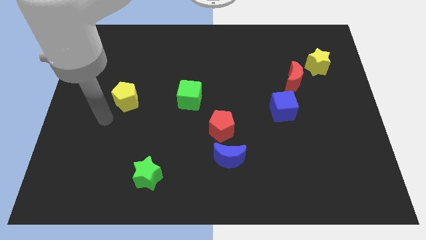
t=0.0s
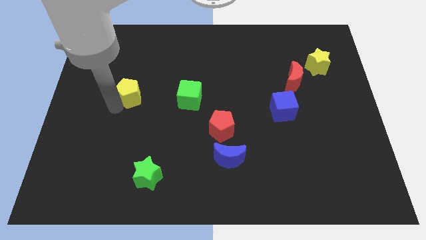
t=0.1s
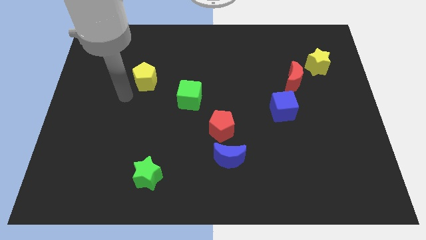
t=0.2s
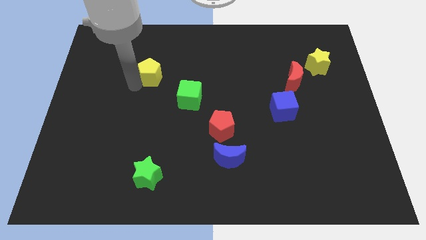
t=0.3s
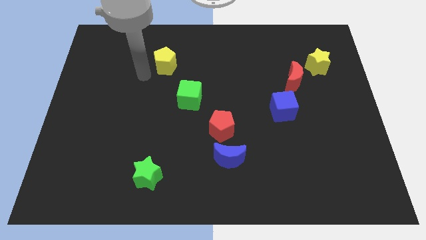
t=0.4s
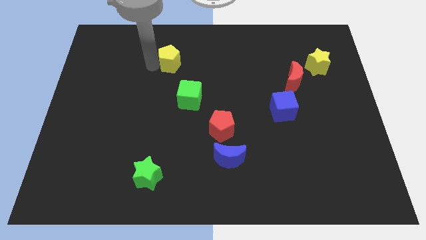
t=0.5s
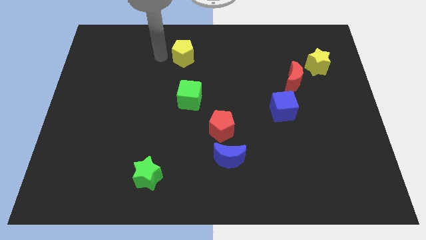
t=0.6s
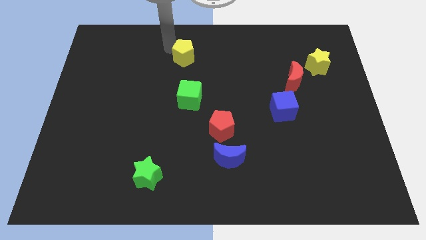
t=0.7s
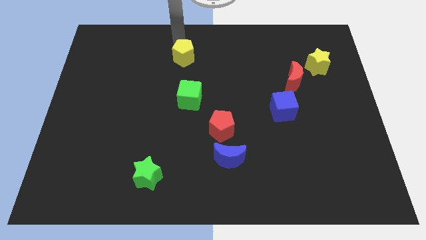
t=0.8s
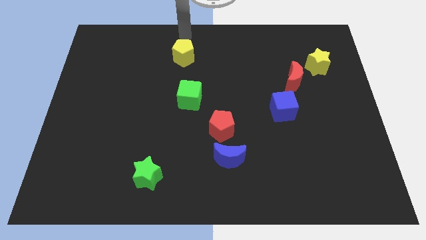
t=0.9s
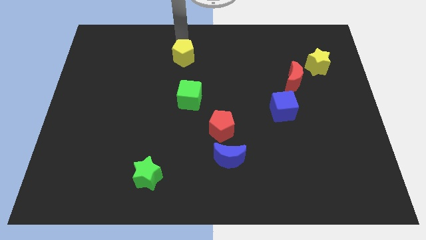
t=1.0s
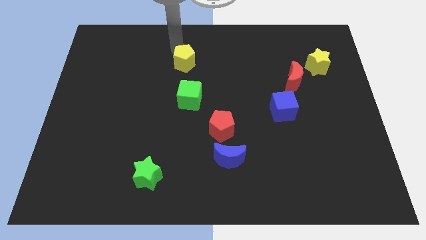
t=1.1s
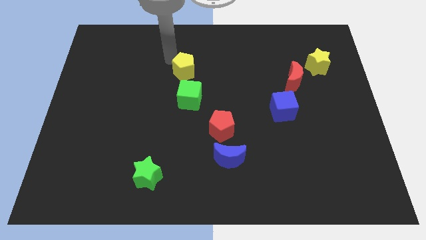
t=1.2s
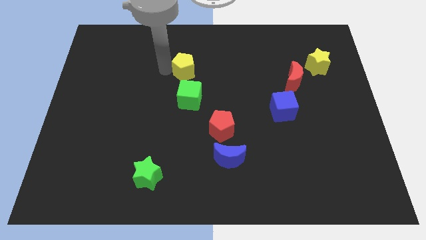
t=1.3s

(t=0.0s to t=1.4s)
push the yellow pentagon to the top of the green cube

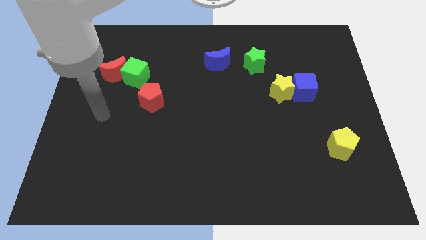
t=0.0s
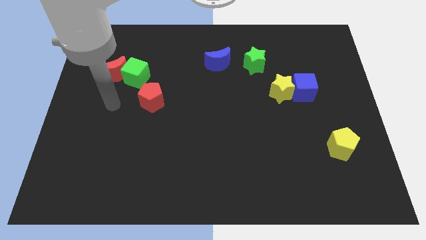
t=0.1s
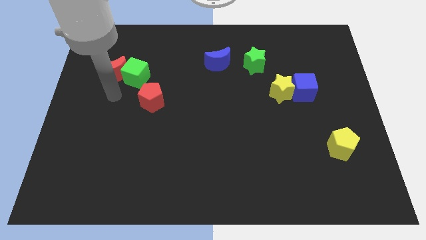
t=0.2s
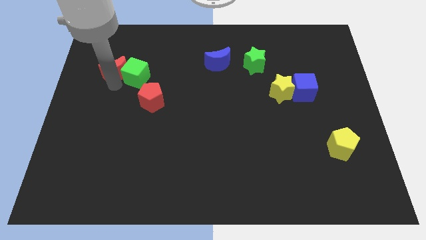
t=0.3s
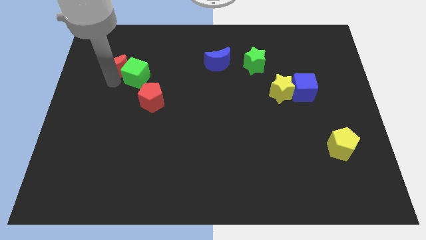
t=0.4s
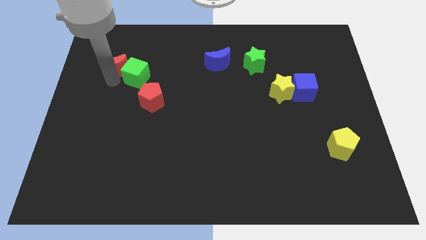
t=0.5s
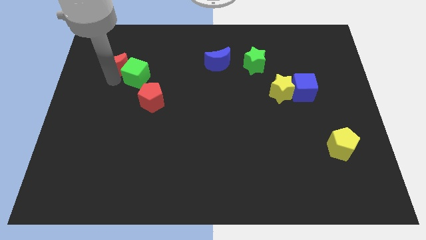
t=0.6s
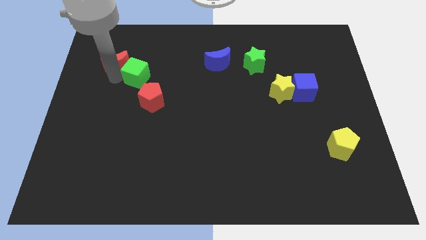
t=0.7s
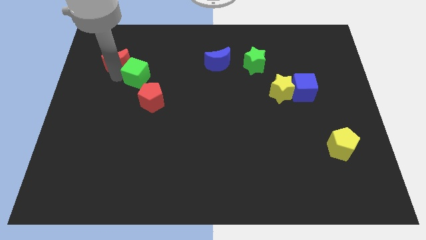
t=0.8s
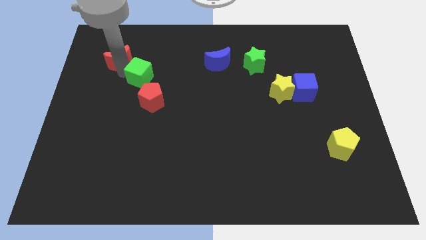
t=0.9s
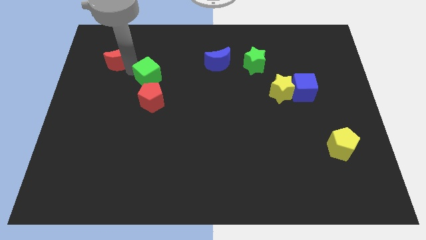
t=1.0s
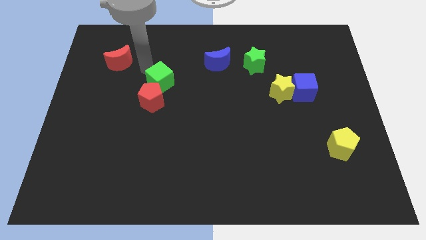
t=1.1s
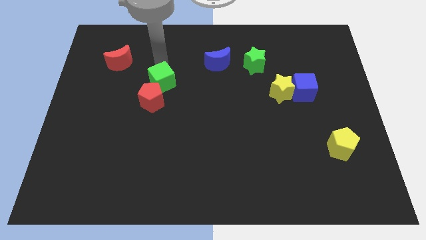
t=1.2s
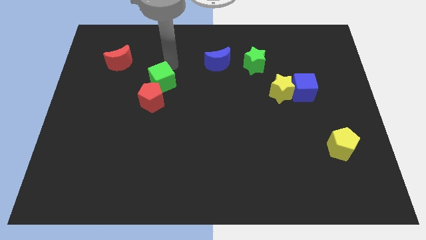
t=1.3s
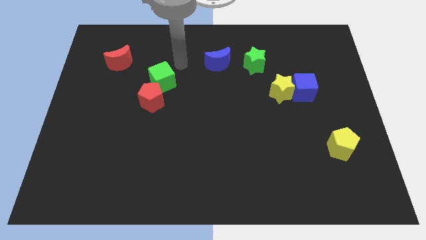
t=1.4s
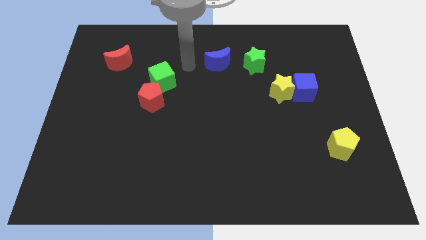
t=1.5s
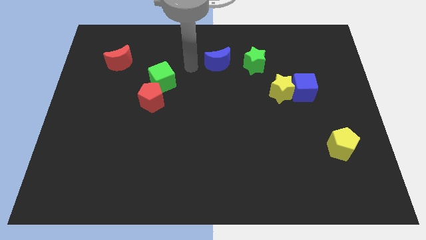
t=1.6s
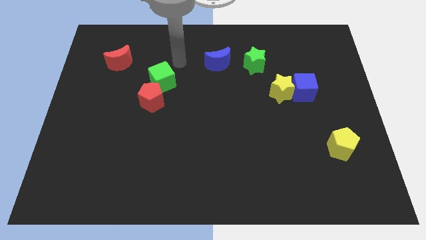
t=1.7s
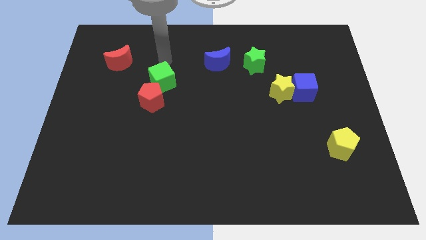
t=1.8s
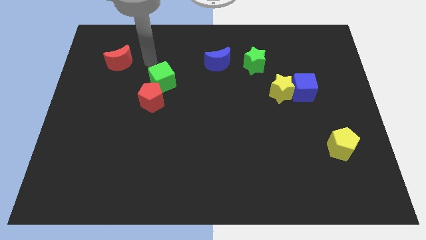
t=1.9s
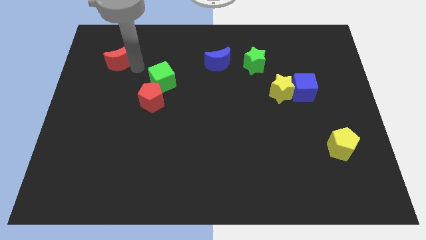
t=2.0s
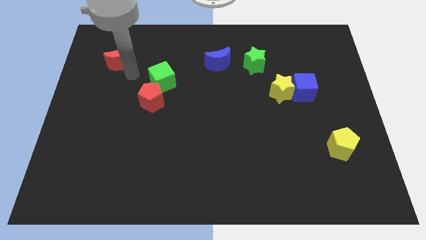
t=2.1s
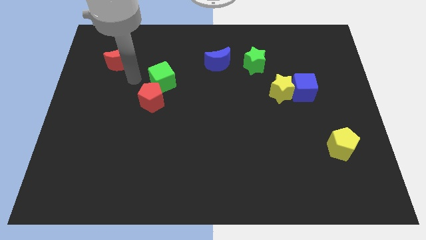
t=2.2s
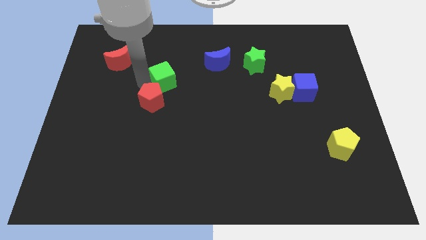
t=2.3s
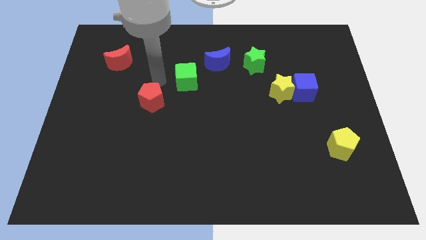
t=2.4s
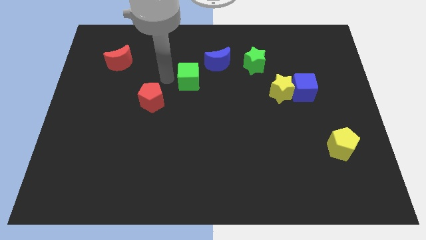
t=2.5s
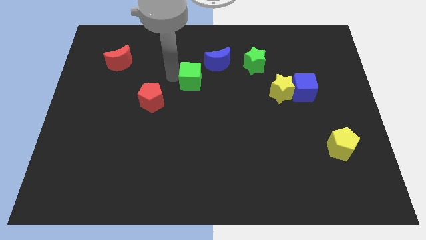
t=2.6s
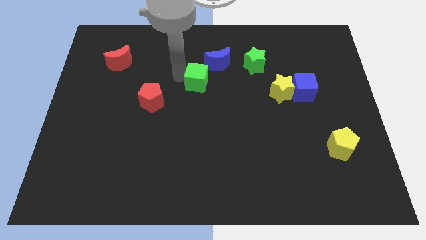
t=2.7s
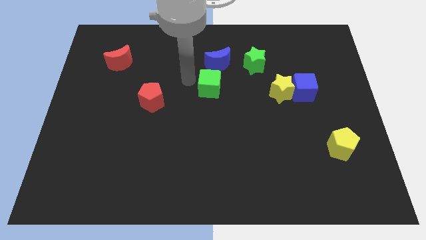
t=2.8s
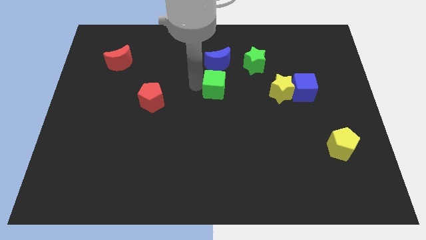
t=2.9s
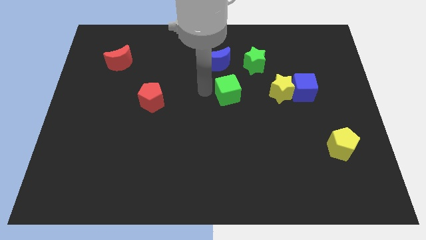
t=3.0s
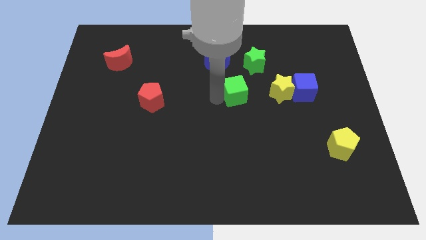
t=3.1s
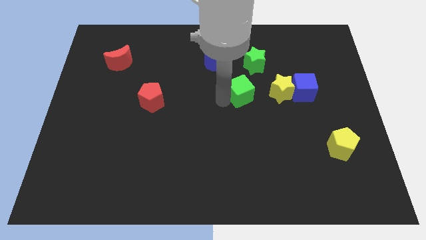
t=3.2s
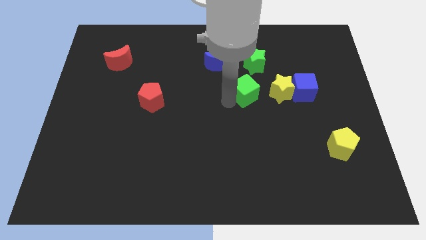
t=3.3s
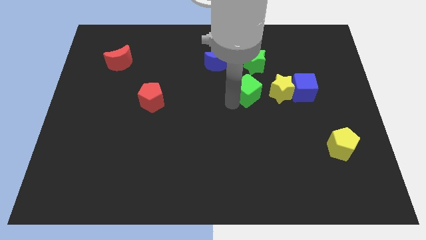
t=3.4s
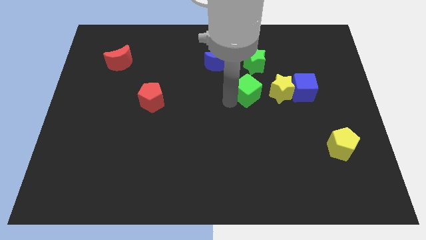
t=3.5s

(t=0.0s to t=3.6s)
separate the green cube from red crescent

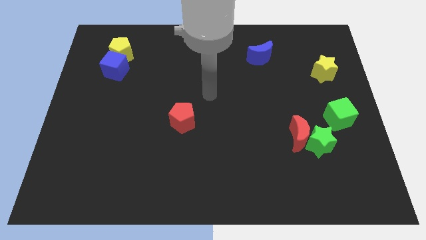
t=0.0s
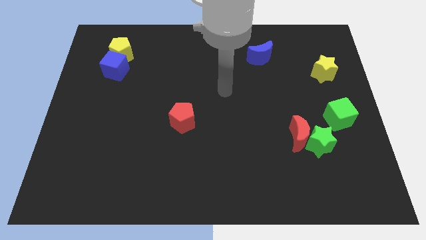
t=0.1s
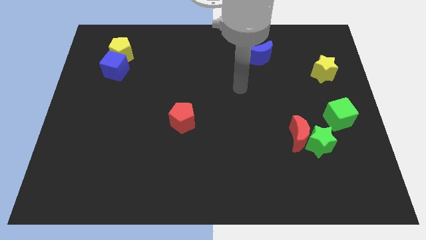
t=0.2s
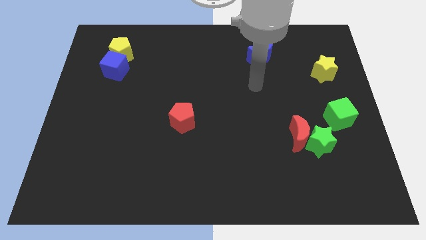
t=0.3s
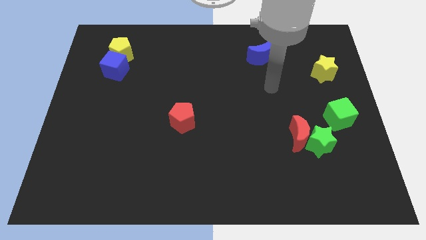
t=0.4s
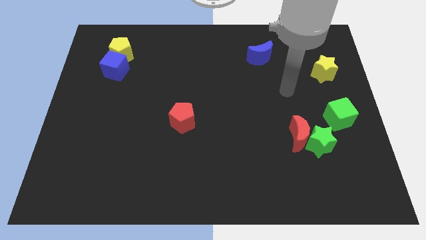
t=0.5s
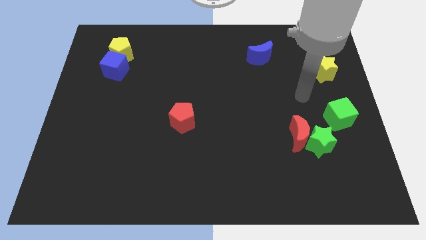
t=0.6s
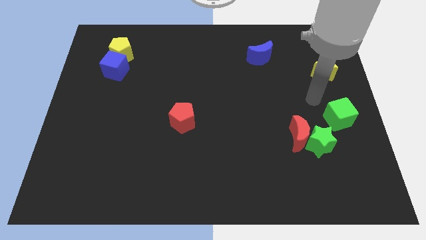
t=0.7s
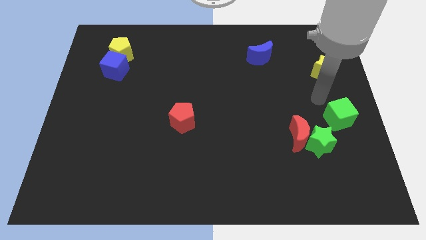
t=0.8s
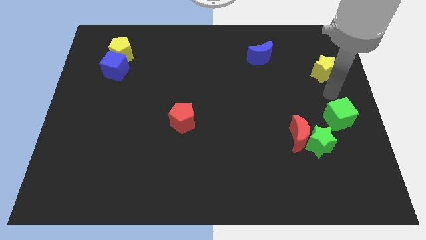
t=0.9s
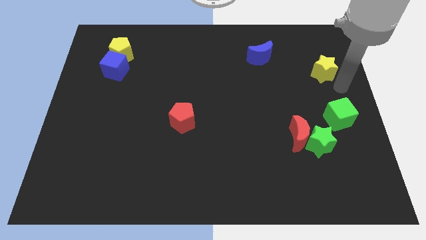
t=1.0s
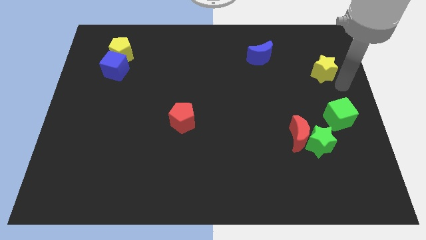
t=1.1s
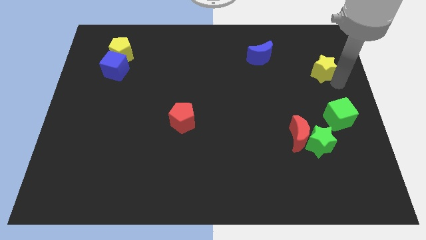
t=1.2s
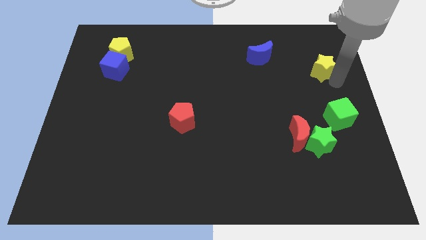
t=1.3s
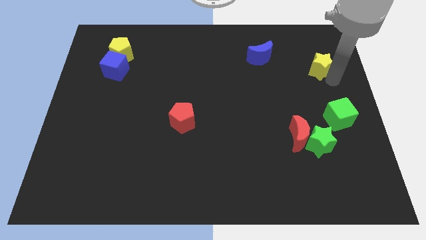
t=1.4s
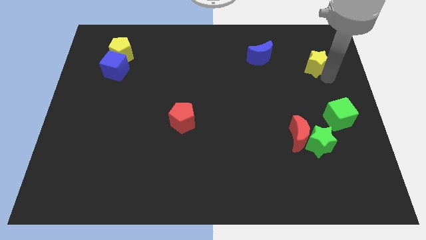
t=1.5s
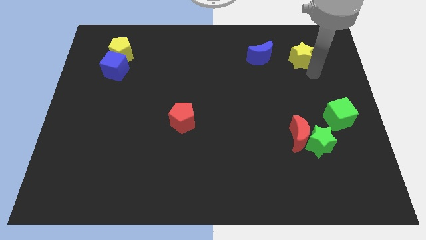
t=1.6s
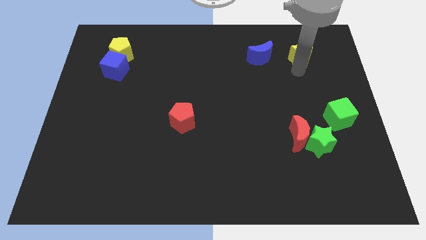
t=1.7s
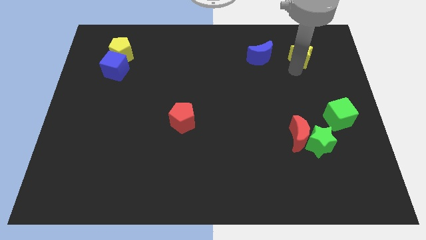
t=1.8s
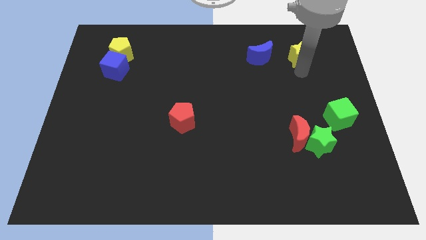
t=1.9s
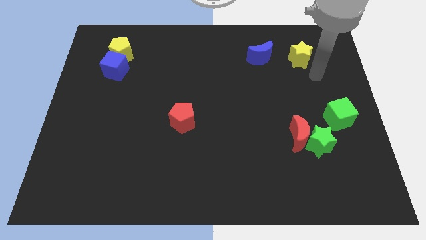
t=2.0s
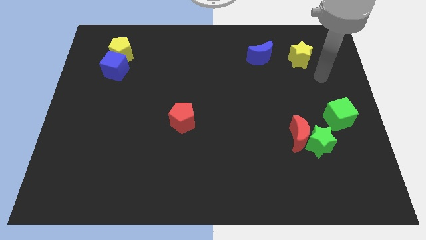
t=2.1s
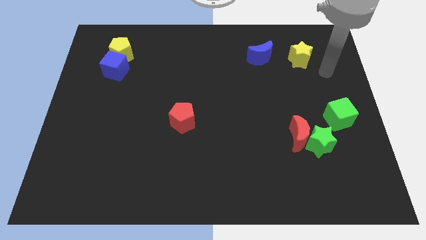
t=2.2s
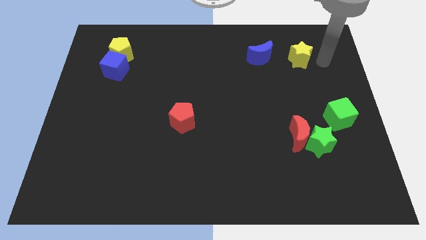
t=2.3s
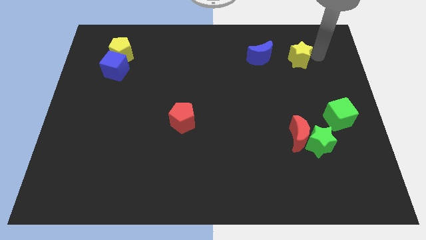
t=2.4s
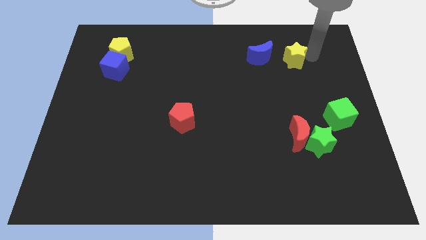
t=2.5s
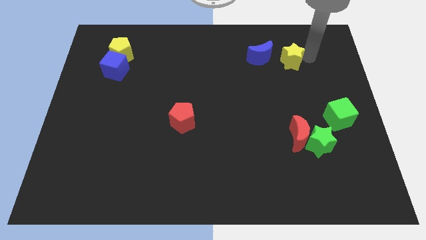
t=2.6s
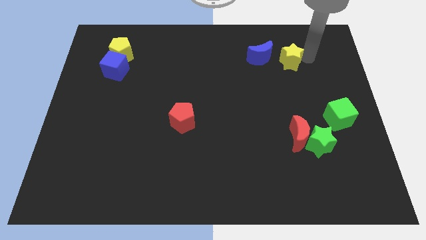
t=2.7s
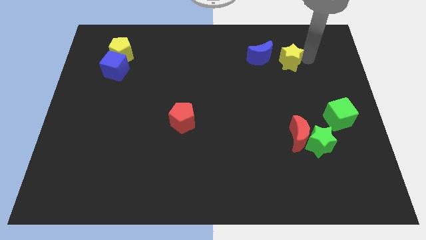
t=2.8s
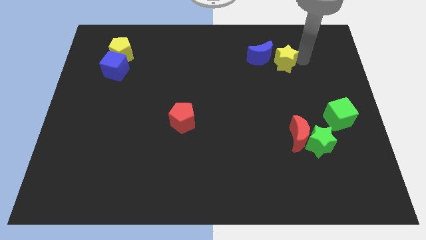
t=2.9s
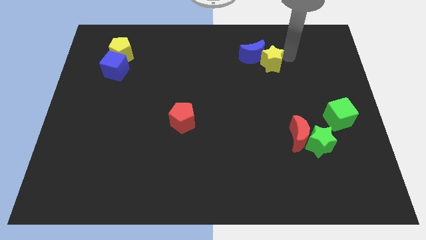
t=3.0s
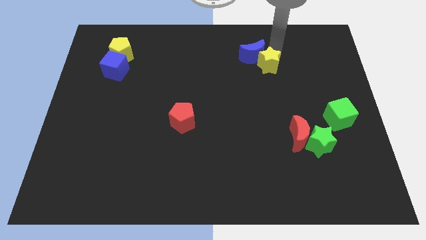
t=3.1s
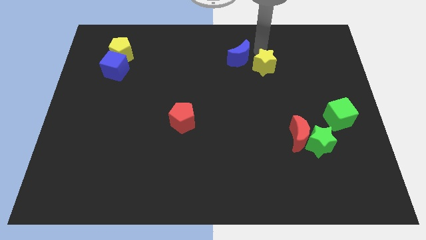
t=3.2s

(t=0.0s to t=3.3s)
push yellow star into blue moon

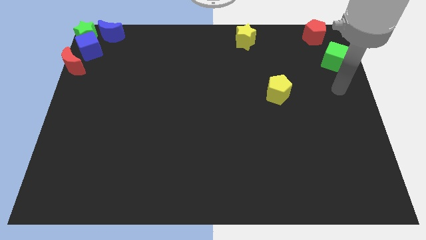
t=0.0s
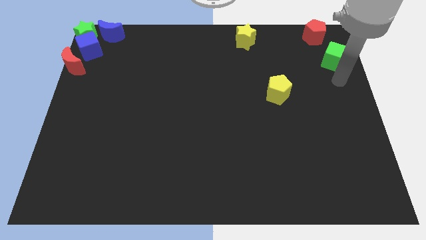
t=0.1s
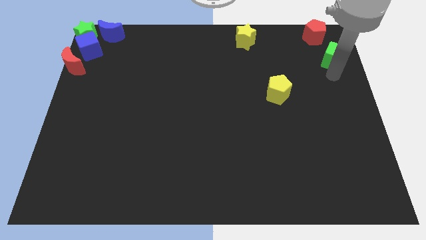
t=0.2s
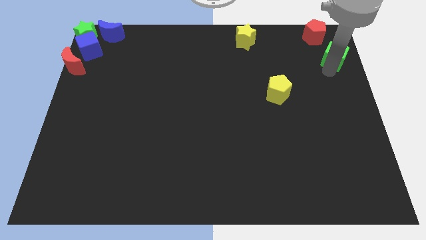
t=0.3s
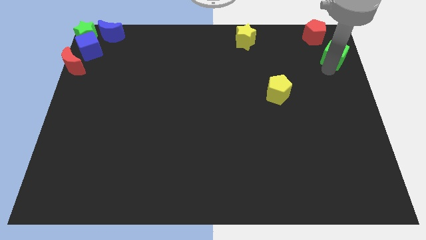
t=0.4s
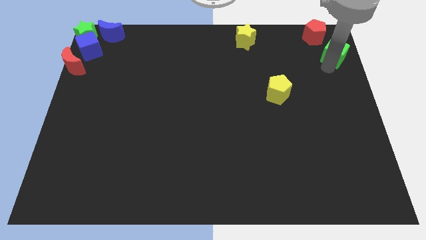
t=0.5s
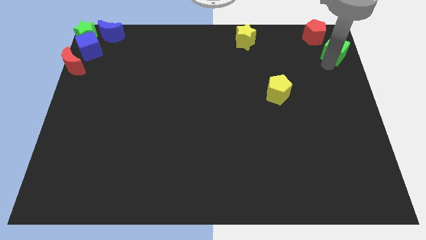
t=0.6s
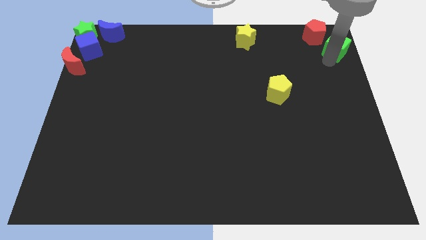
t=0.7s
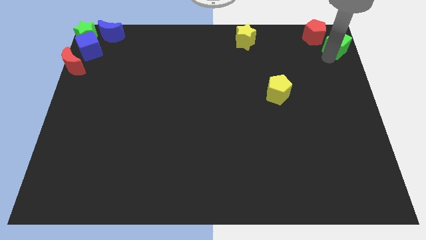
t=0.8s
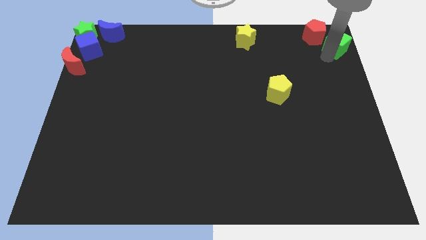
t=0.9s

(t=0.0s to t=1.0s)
place the green cube close to the red pentagon
